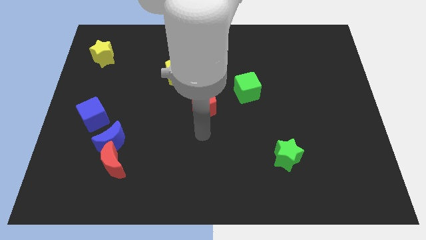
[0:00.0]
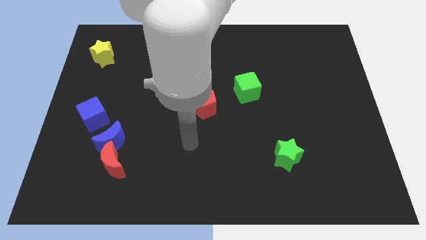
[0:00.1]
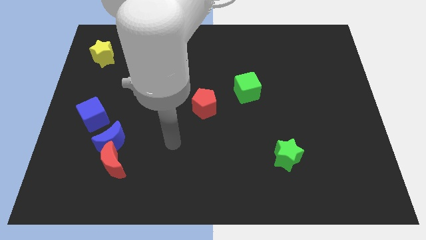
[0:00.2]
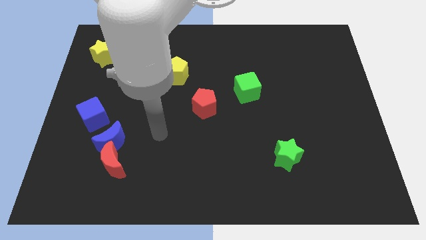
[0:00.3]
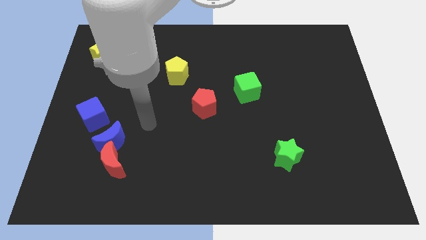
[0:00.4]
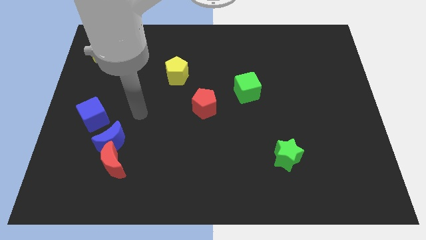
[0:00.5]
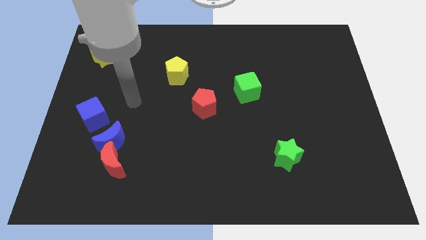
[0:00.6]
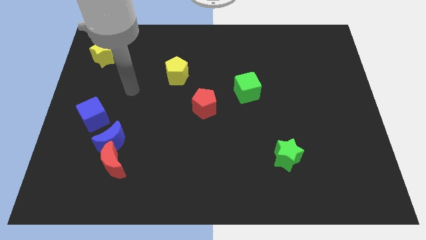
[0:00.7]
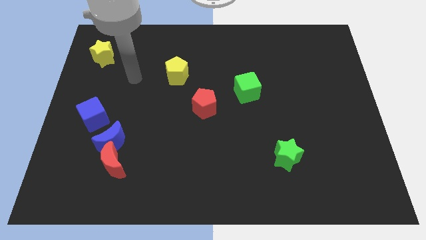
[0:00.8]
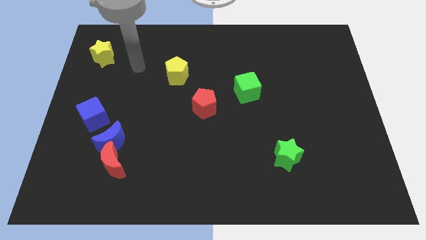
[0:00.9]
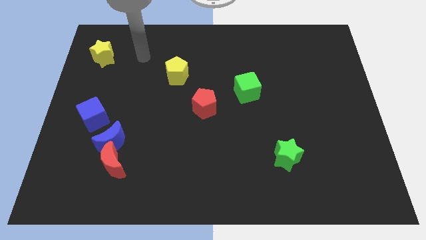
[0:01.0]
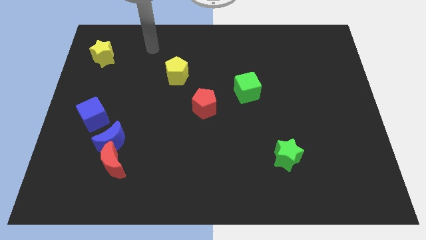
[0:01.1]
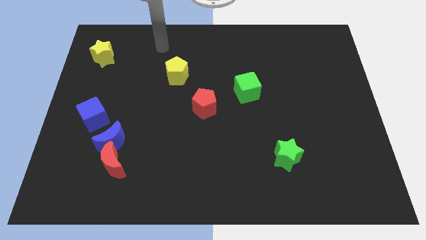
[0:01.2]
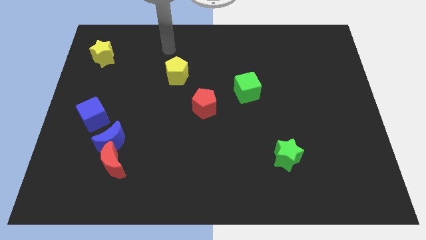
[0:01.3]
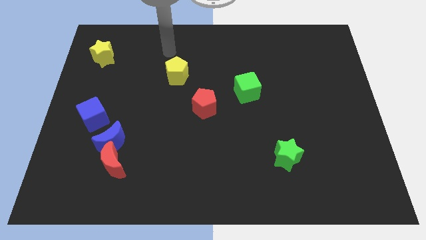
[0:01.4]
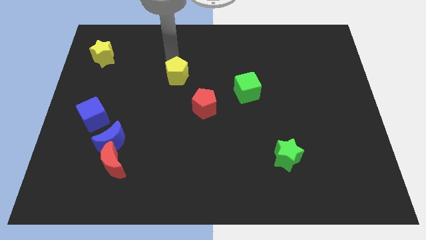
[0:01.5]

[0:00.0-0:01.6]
move your hand to the top of the yellow pentagon

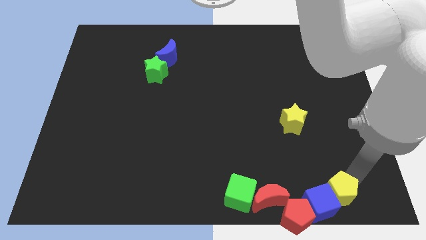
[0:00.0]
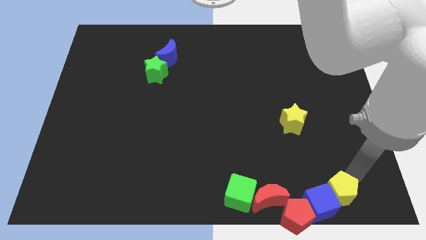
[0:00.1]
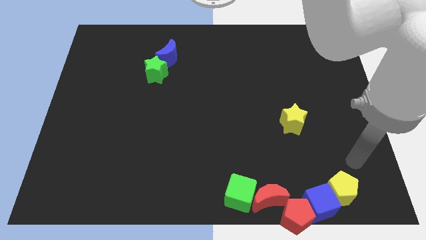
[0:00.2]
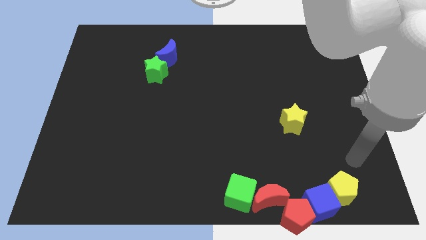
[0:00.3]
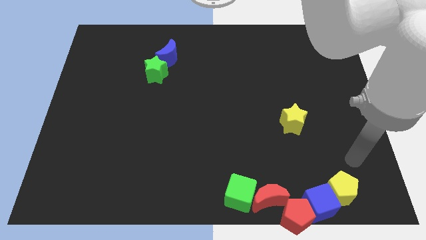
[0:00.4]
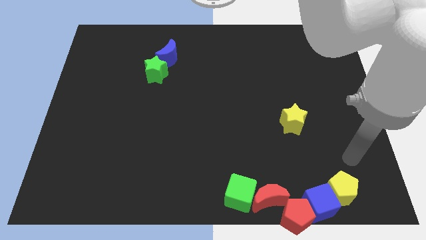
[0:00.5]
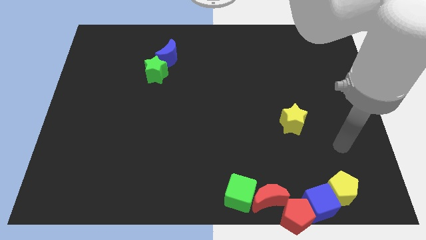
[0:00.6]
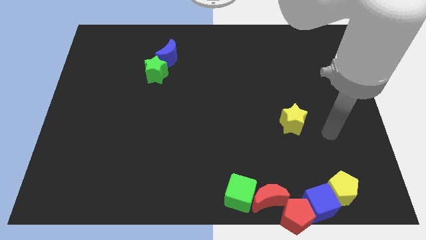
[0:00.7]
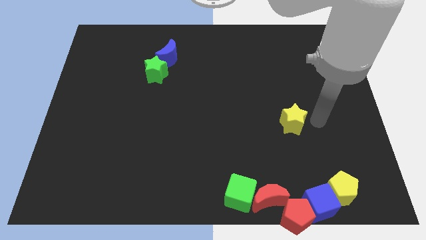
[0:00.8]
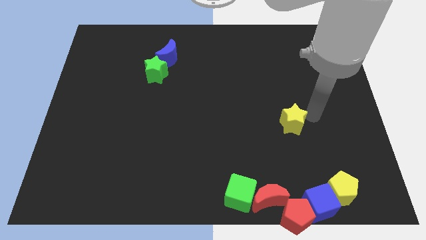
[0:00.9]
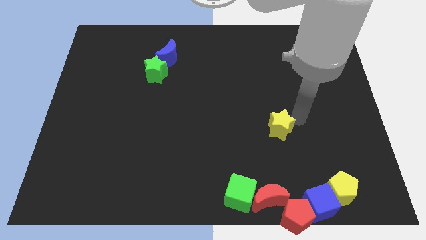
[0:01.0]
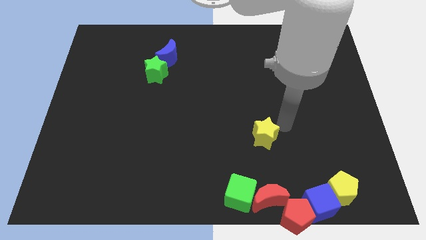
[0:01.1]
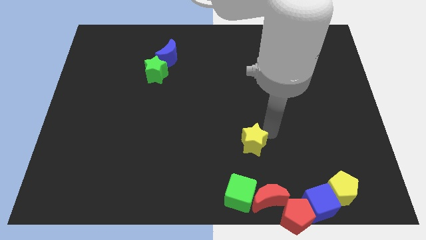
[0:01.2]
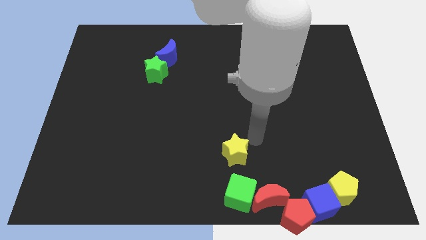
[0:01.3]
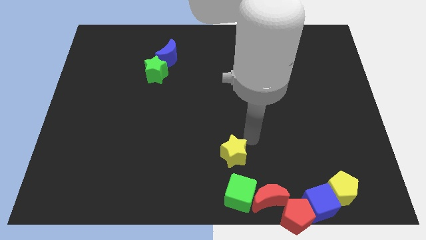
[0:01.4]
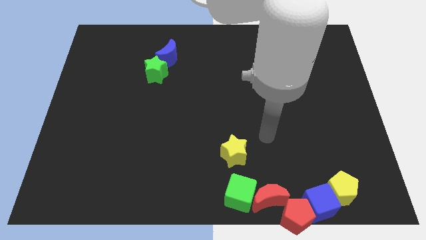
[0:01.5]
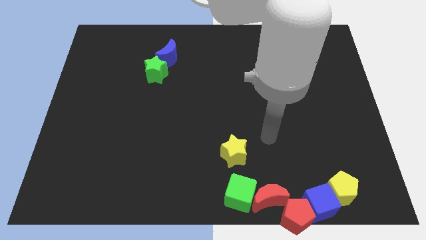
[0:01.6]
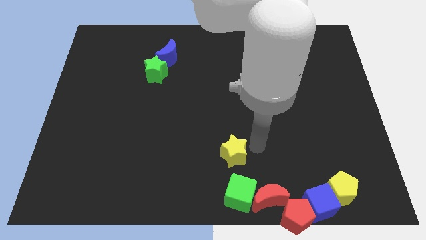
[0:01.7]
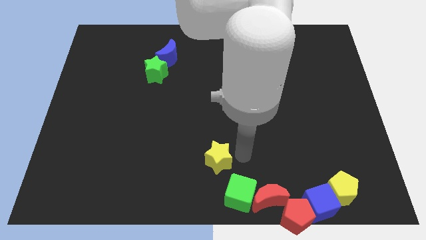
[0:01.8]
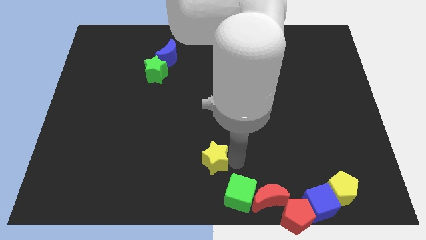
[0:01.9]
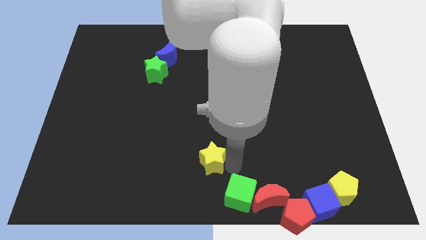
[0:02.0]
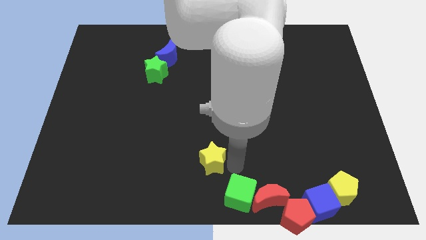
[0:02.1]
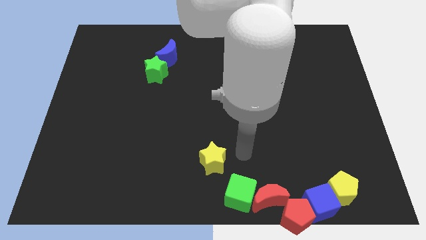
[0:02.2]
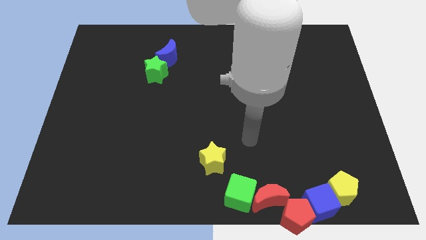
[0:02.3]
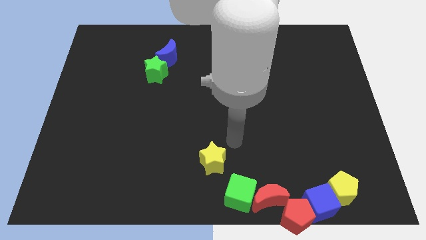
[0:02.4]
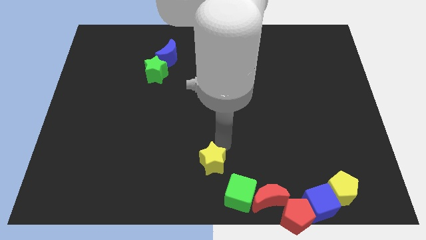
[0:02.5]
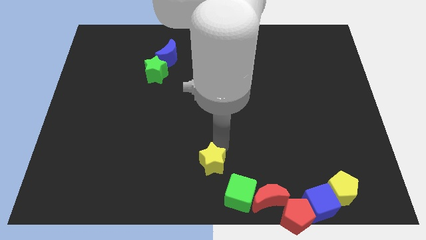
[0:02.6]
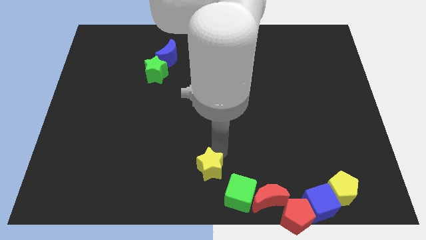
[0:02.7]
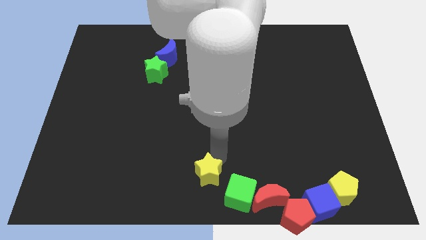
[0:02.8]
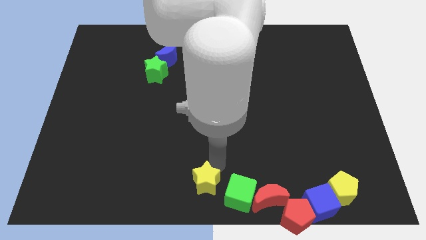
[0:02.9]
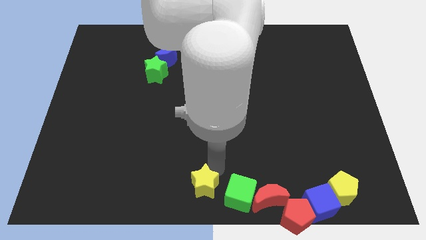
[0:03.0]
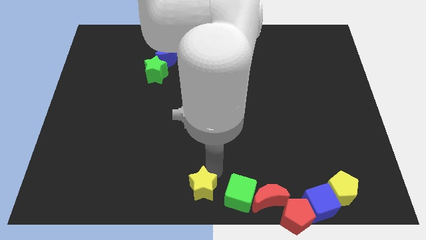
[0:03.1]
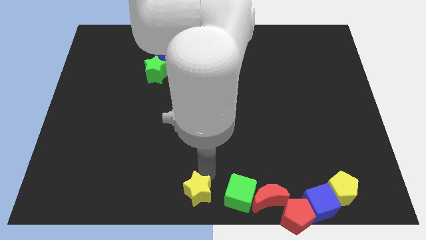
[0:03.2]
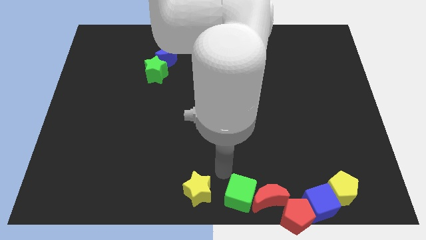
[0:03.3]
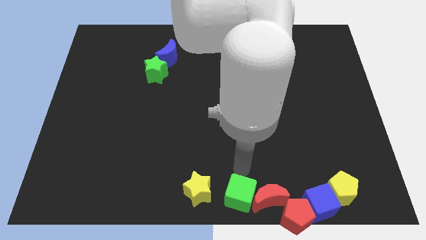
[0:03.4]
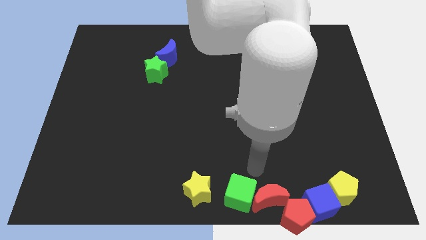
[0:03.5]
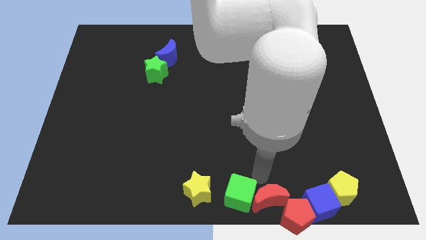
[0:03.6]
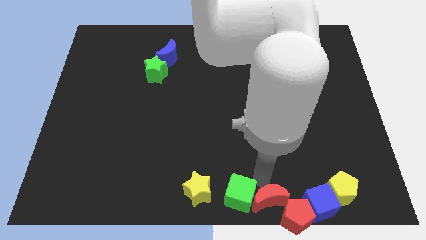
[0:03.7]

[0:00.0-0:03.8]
move the yellow star to the left of green cube

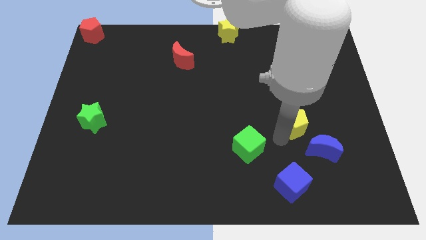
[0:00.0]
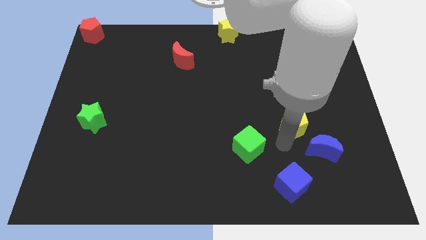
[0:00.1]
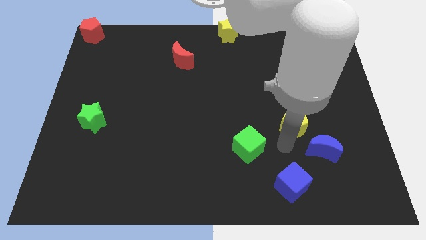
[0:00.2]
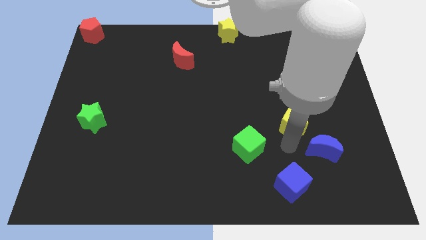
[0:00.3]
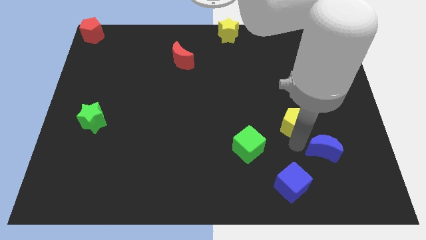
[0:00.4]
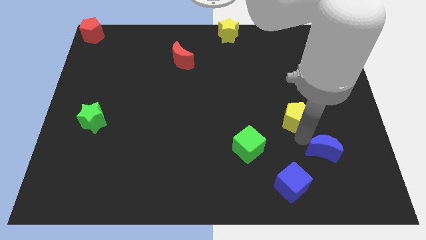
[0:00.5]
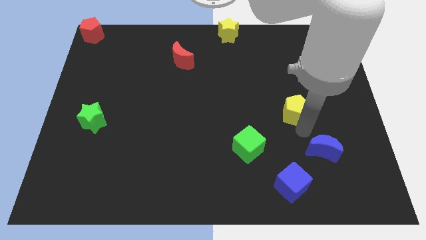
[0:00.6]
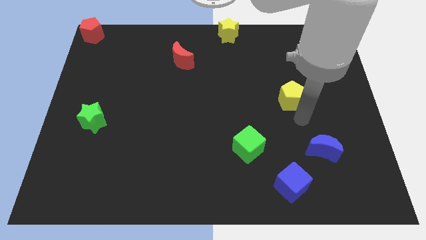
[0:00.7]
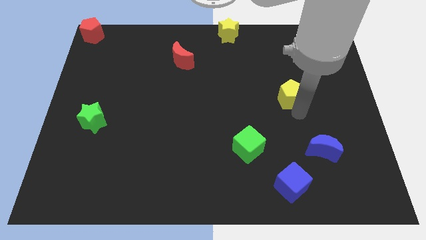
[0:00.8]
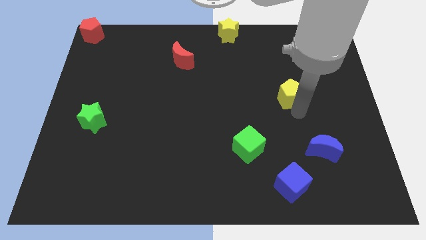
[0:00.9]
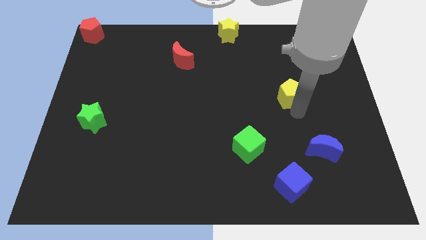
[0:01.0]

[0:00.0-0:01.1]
move the yellow pentagon to the right center of the board

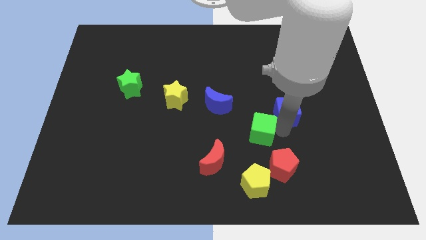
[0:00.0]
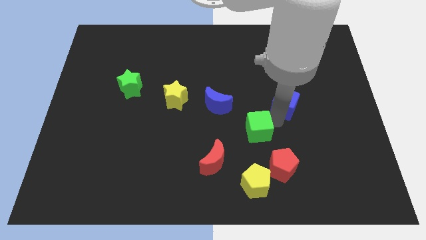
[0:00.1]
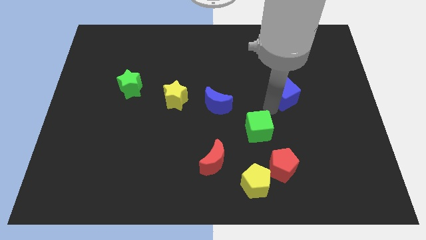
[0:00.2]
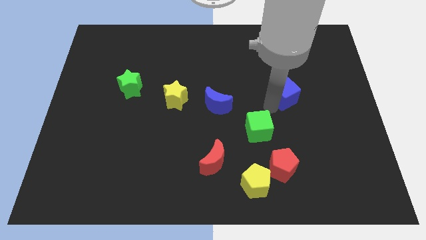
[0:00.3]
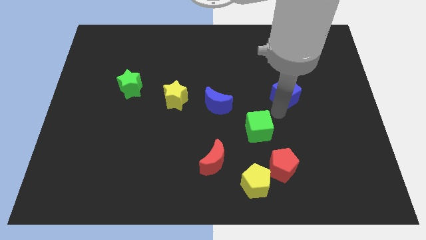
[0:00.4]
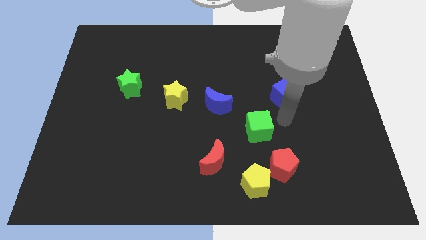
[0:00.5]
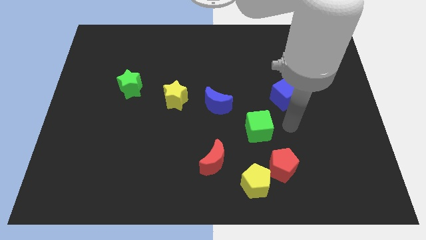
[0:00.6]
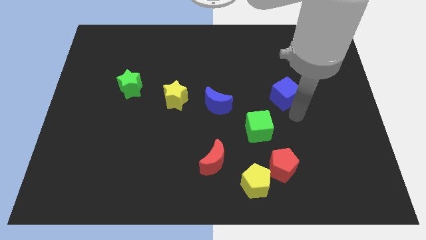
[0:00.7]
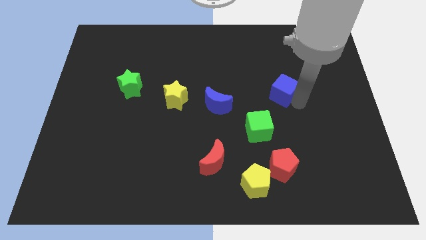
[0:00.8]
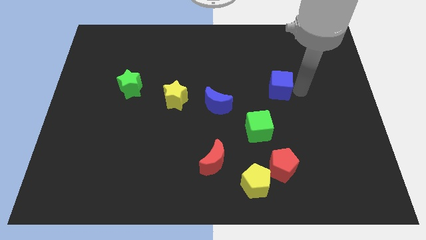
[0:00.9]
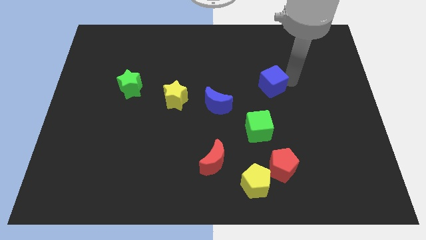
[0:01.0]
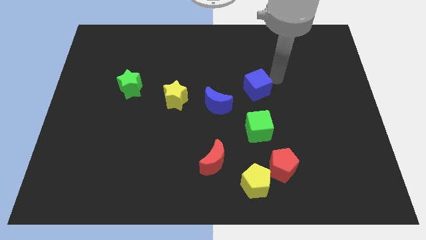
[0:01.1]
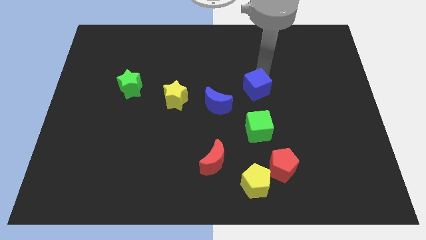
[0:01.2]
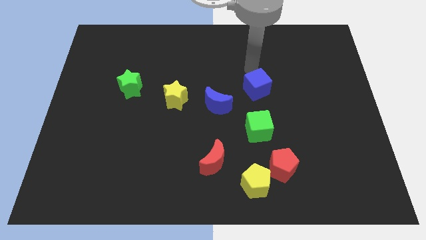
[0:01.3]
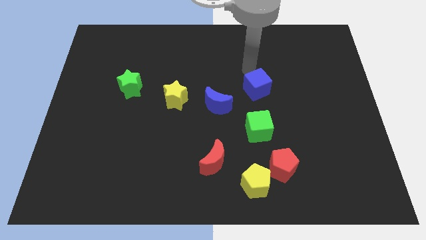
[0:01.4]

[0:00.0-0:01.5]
put the blue cube above the green cube

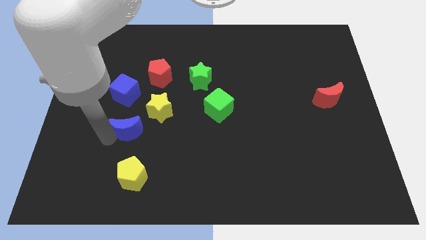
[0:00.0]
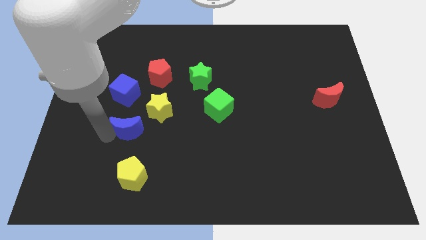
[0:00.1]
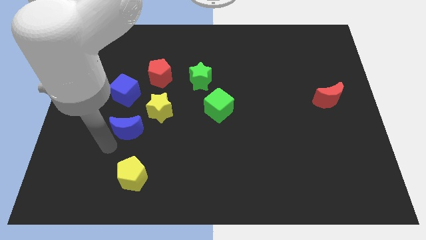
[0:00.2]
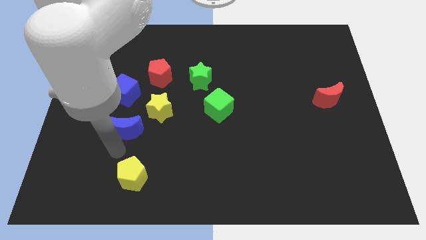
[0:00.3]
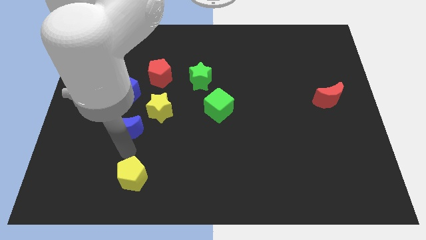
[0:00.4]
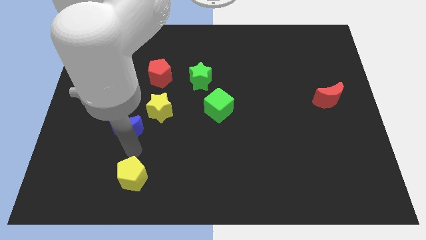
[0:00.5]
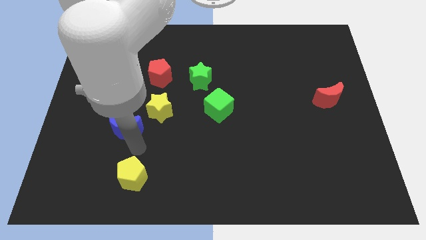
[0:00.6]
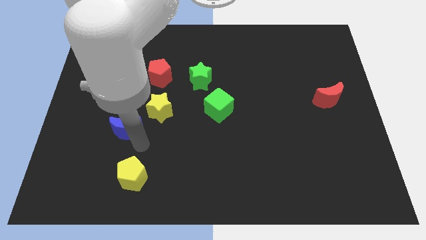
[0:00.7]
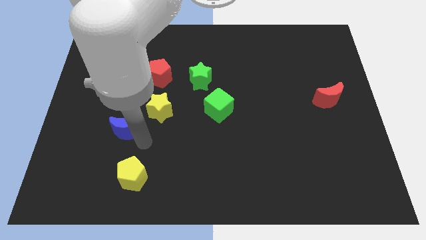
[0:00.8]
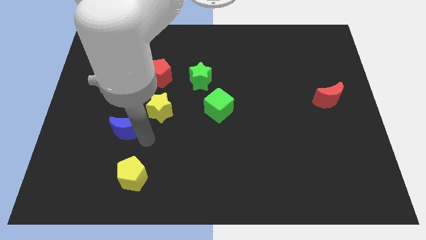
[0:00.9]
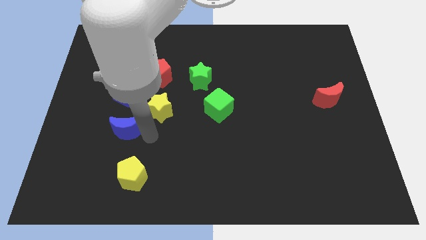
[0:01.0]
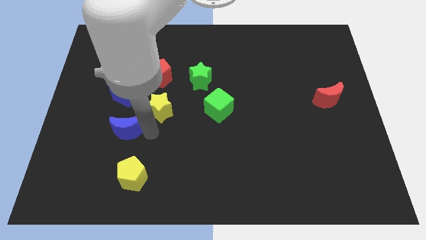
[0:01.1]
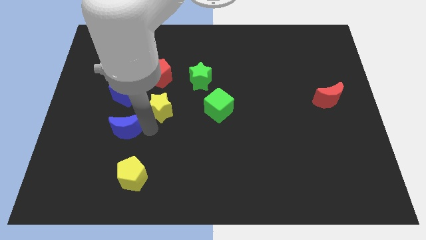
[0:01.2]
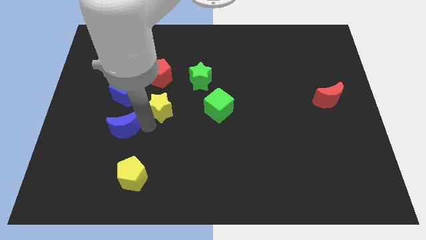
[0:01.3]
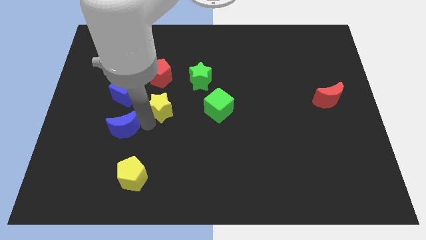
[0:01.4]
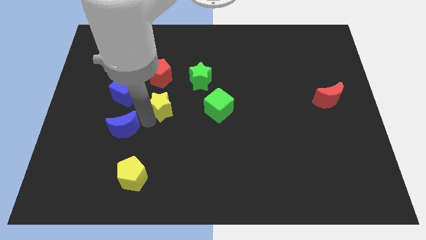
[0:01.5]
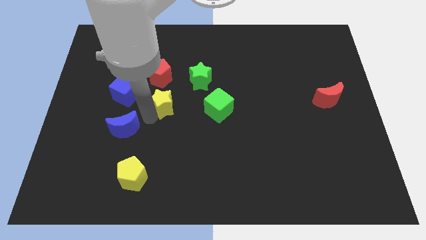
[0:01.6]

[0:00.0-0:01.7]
place your arm between blue moon and yellow star
